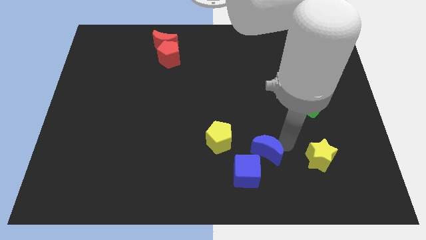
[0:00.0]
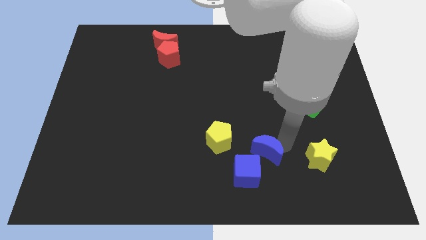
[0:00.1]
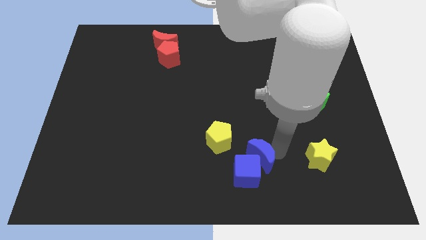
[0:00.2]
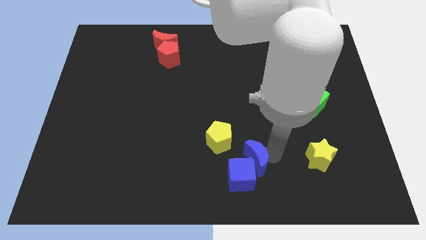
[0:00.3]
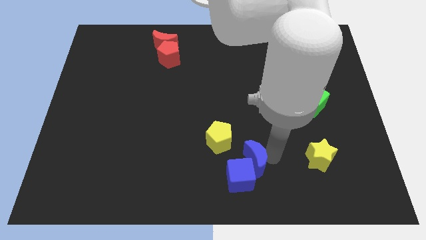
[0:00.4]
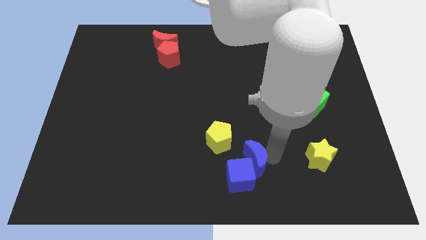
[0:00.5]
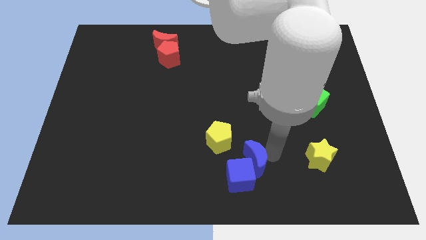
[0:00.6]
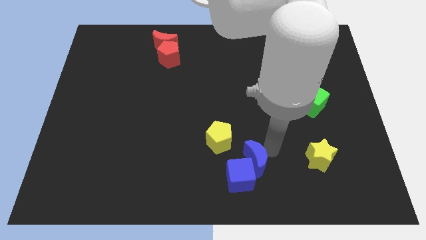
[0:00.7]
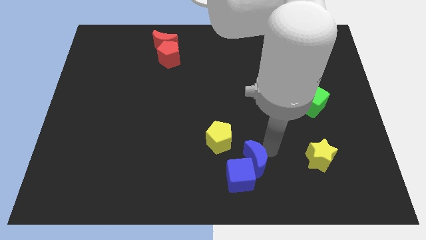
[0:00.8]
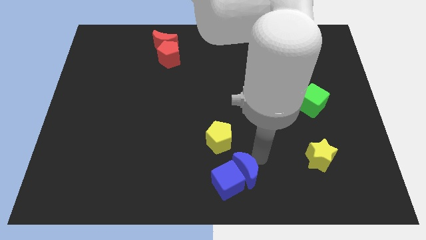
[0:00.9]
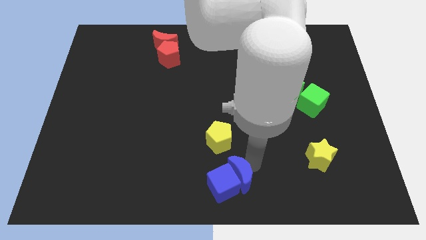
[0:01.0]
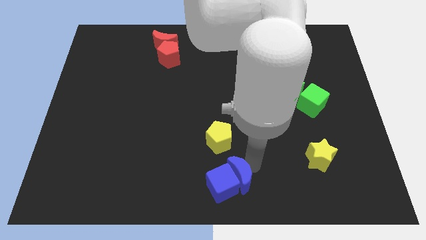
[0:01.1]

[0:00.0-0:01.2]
place the blue blocks below the yellow pentagon

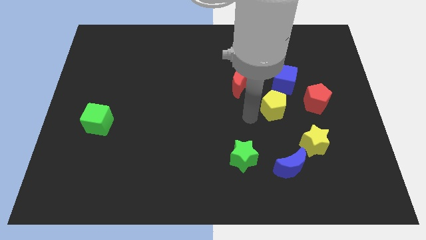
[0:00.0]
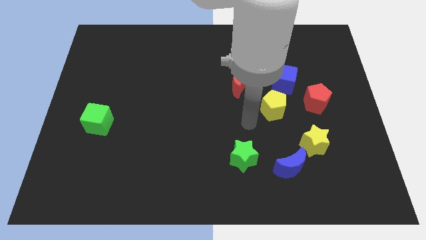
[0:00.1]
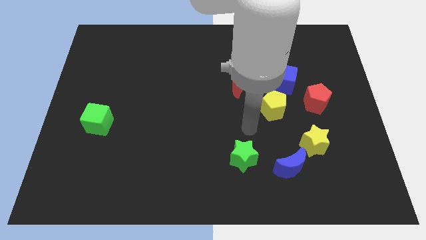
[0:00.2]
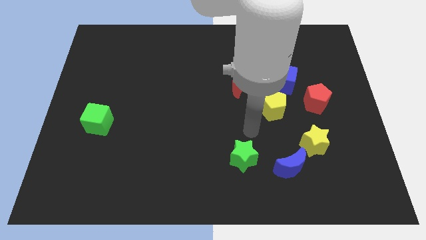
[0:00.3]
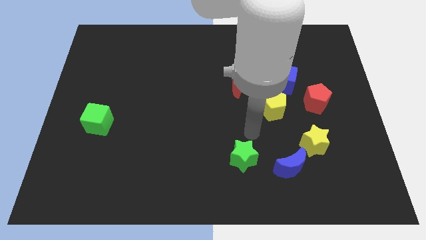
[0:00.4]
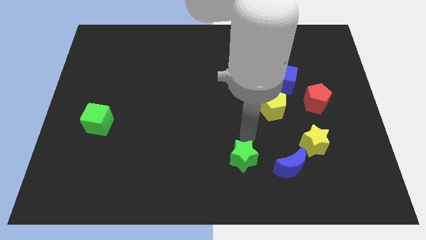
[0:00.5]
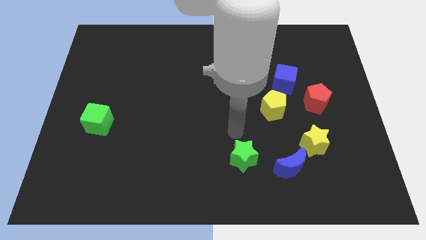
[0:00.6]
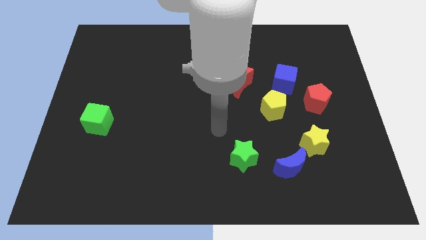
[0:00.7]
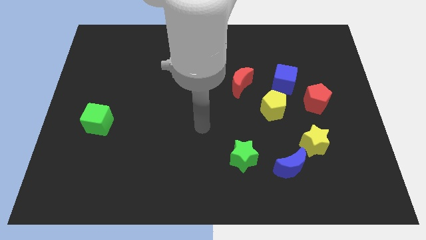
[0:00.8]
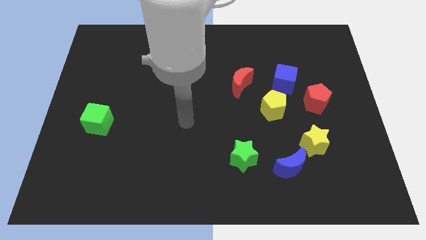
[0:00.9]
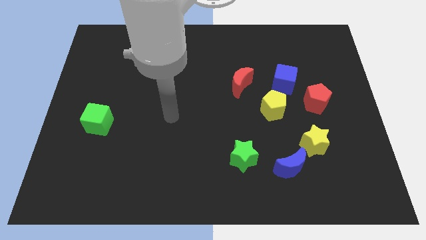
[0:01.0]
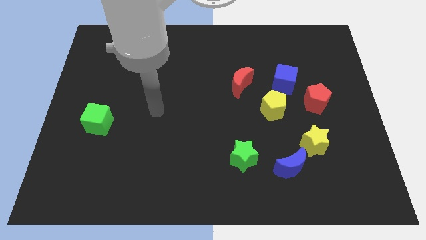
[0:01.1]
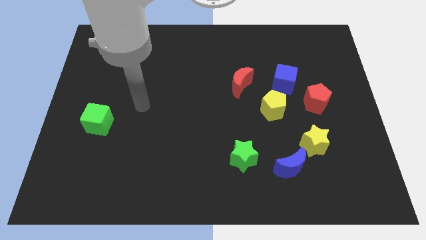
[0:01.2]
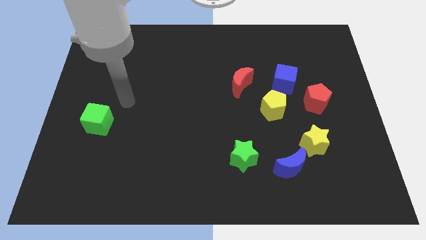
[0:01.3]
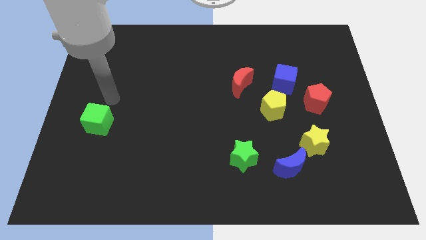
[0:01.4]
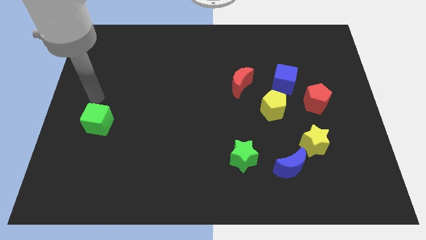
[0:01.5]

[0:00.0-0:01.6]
go away from the yellow pentagon

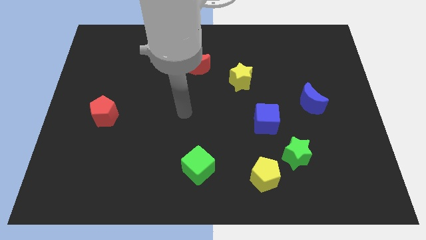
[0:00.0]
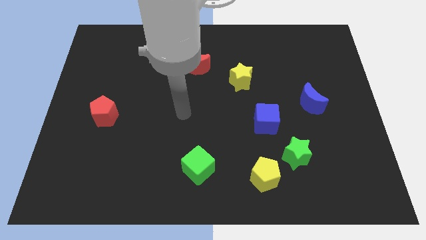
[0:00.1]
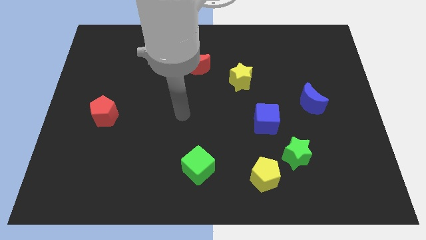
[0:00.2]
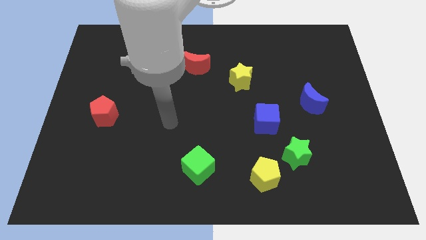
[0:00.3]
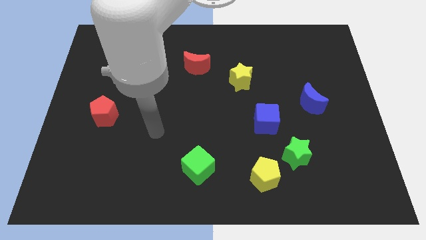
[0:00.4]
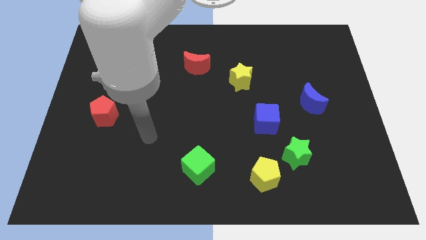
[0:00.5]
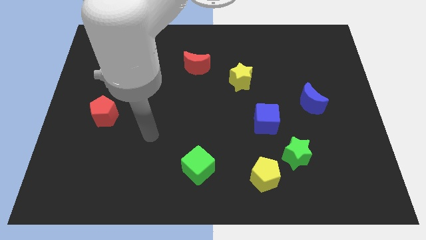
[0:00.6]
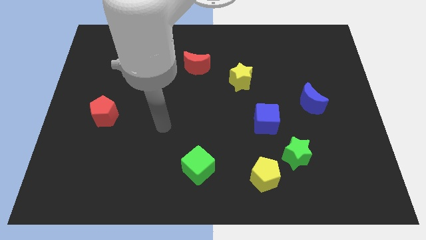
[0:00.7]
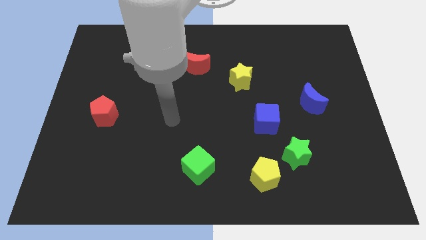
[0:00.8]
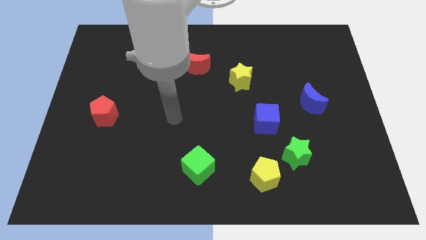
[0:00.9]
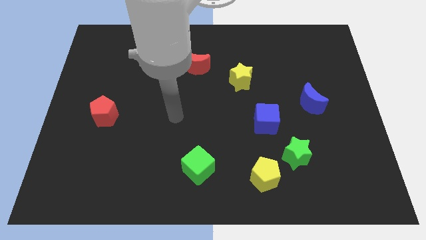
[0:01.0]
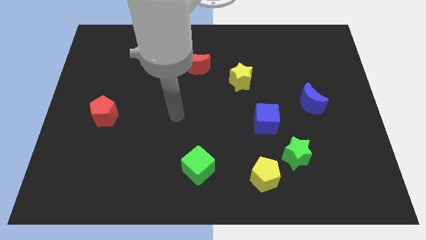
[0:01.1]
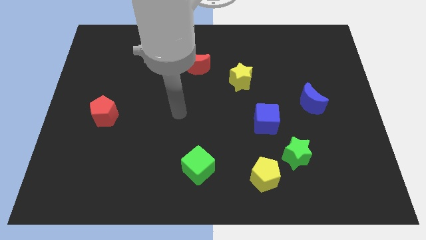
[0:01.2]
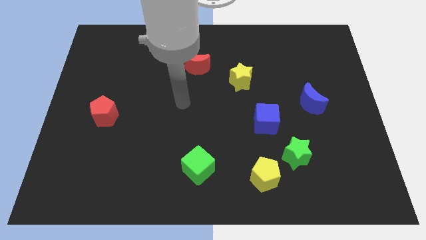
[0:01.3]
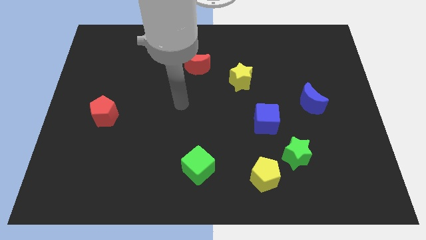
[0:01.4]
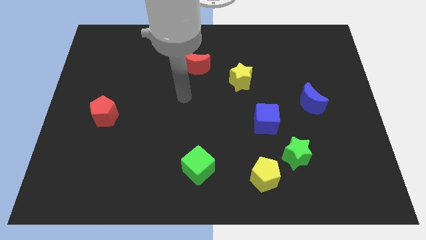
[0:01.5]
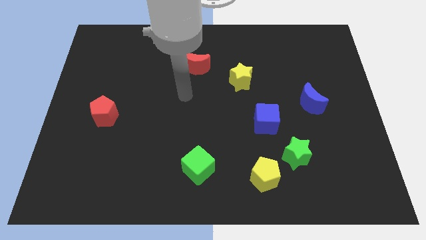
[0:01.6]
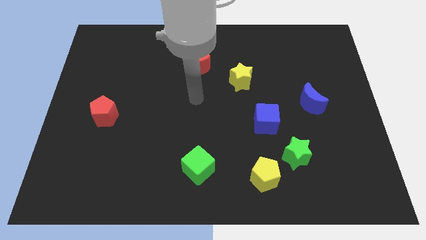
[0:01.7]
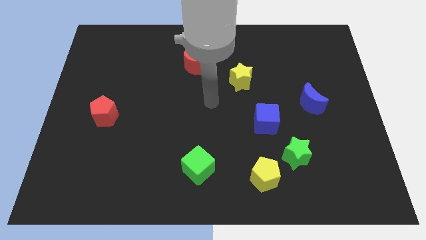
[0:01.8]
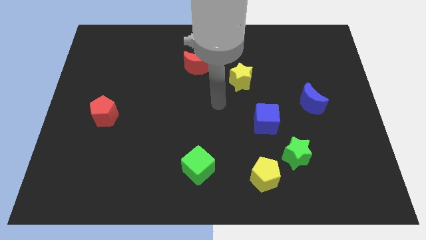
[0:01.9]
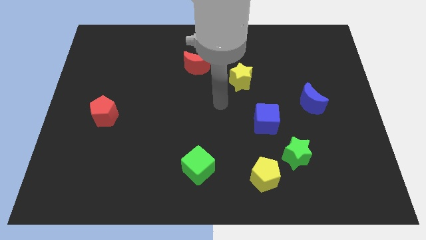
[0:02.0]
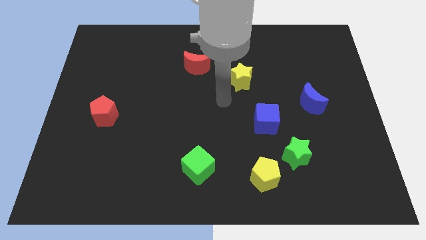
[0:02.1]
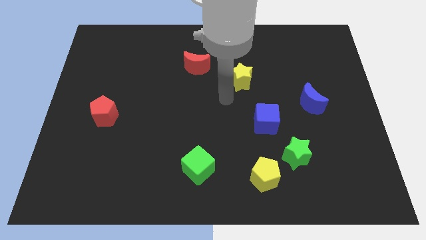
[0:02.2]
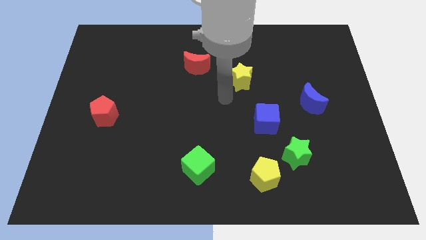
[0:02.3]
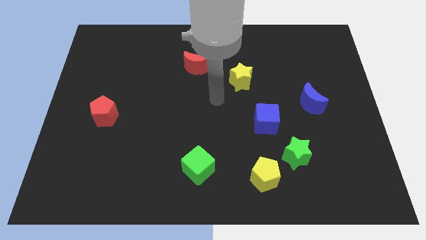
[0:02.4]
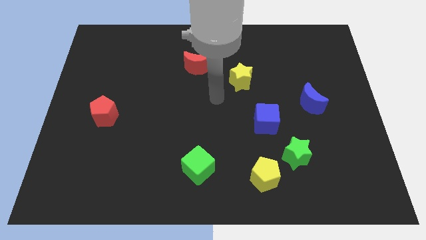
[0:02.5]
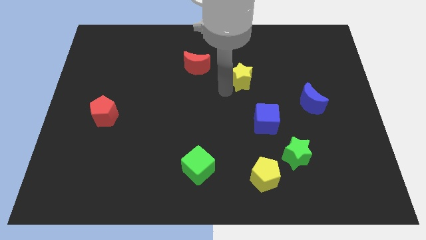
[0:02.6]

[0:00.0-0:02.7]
move your arm towards the yellow star

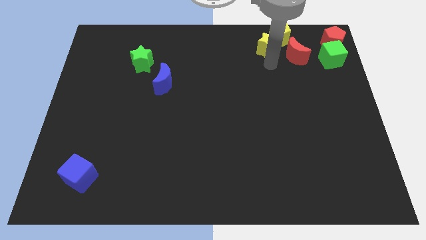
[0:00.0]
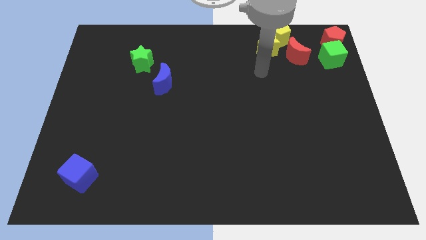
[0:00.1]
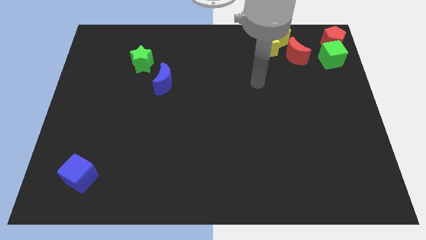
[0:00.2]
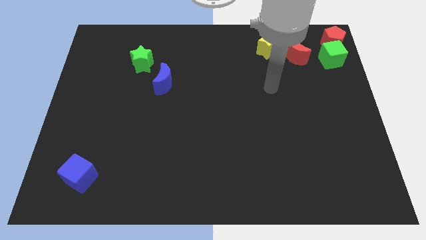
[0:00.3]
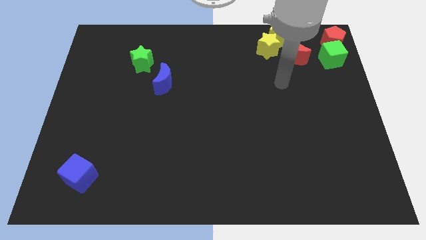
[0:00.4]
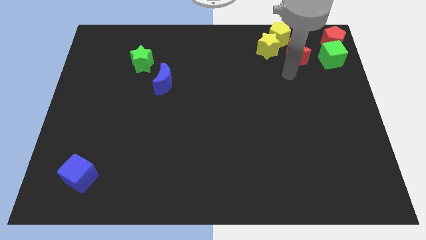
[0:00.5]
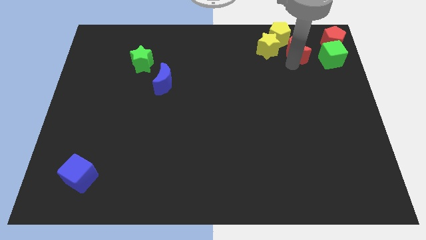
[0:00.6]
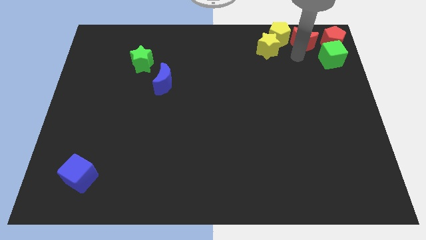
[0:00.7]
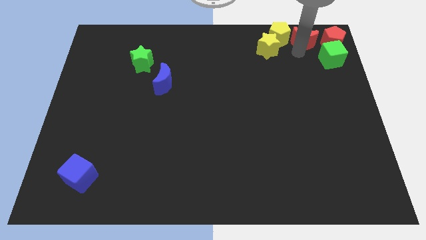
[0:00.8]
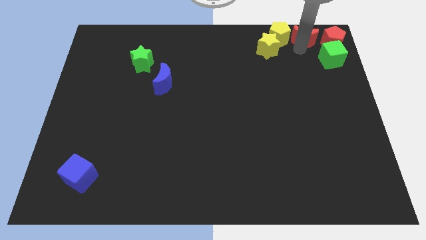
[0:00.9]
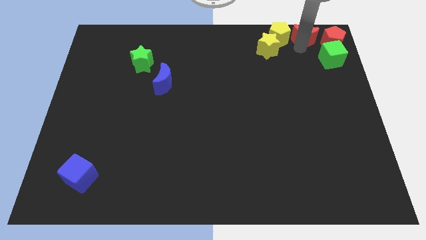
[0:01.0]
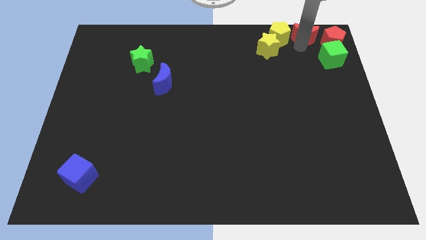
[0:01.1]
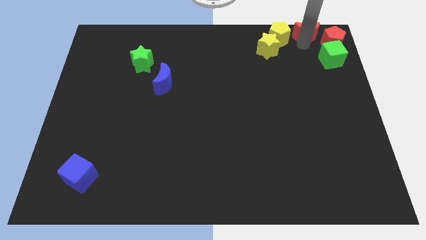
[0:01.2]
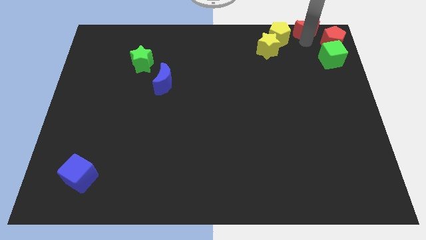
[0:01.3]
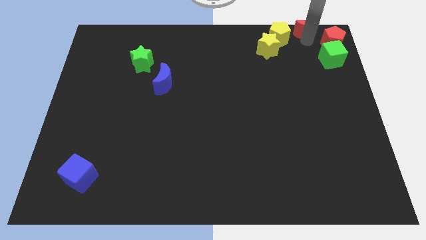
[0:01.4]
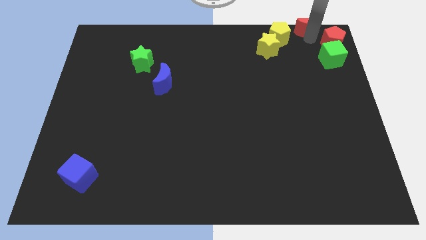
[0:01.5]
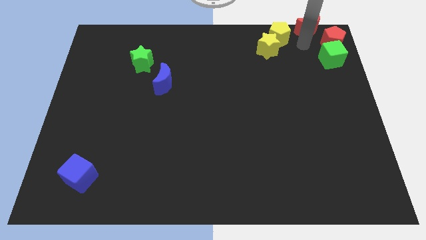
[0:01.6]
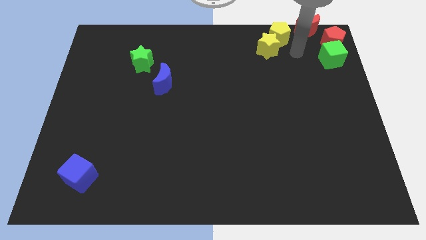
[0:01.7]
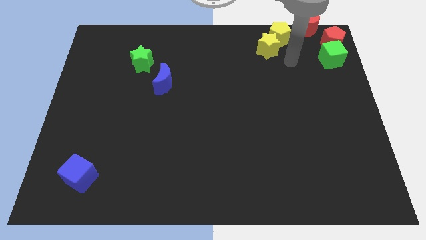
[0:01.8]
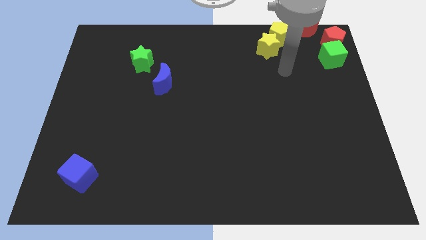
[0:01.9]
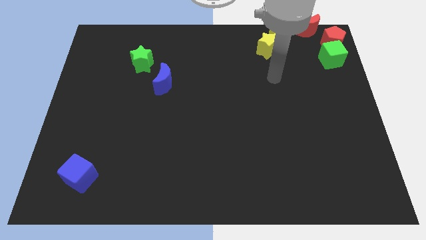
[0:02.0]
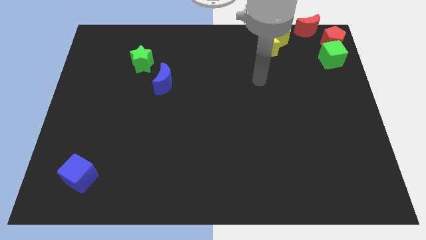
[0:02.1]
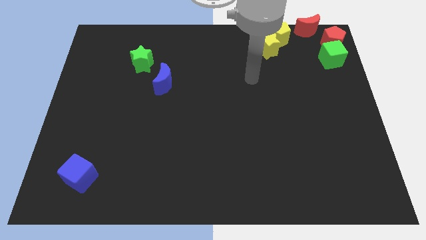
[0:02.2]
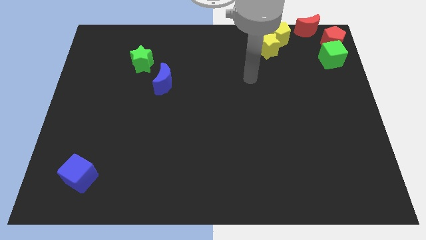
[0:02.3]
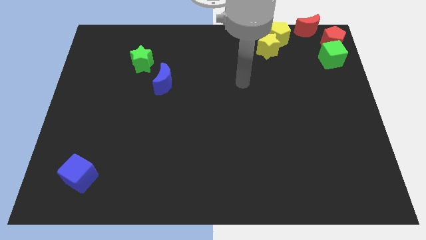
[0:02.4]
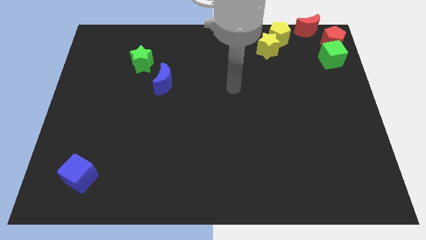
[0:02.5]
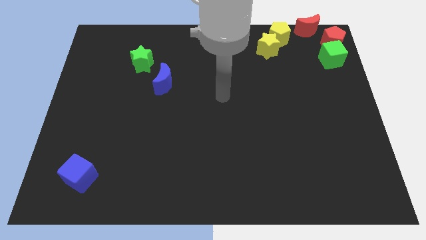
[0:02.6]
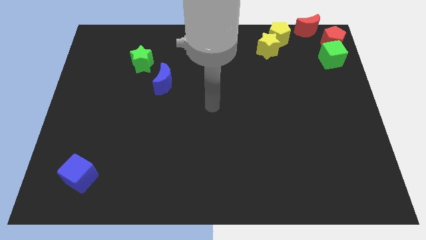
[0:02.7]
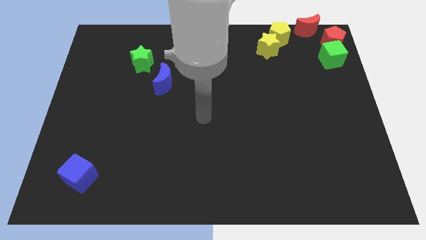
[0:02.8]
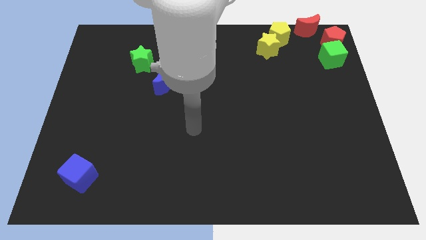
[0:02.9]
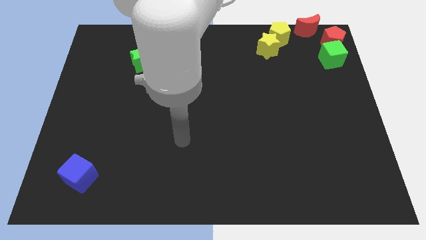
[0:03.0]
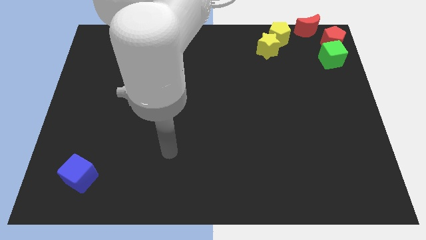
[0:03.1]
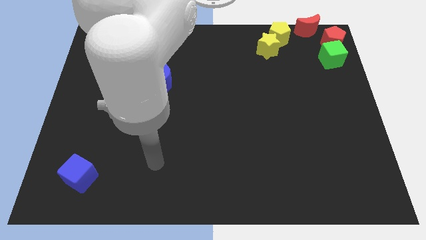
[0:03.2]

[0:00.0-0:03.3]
place the red moon in between the yellow pentagon and red pentagon

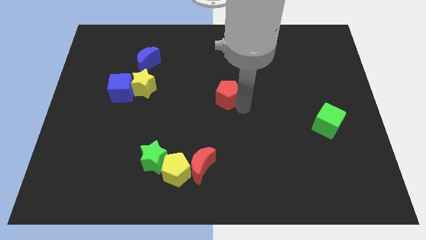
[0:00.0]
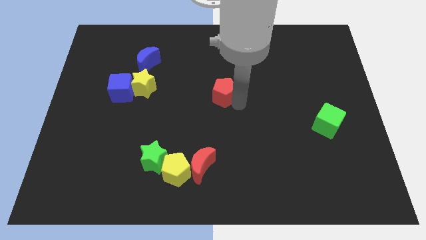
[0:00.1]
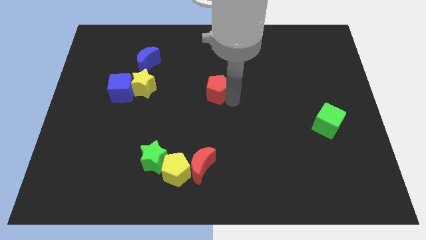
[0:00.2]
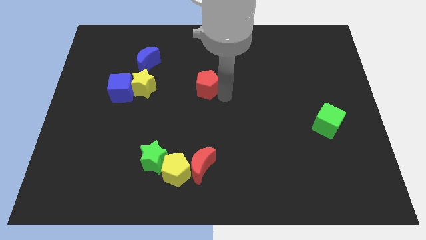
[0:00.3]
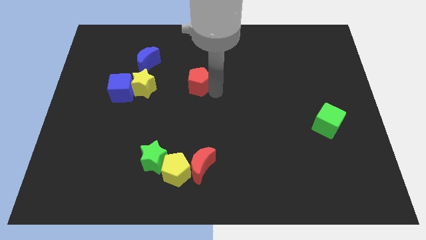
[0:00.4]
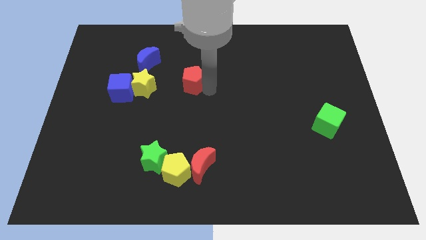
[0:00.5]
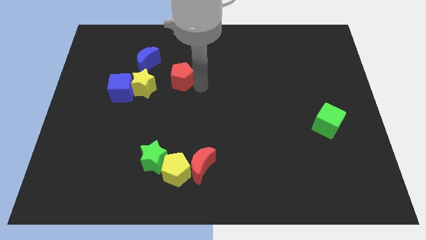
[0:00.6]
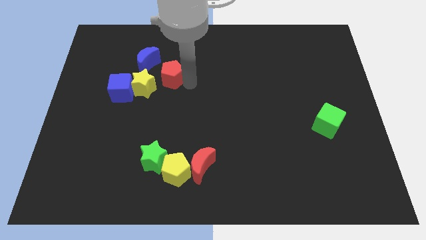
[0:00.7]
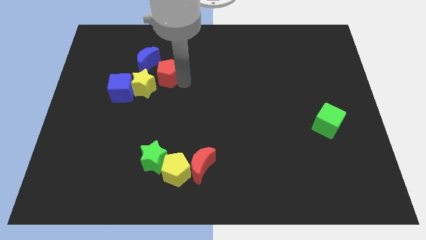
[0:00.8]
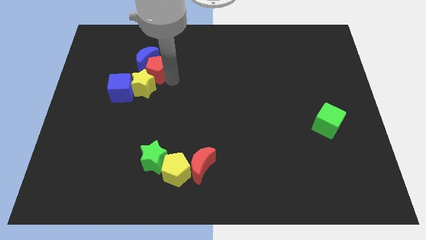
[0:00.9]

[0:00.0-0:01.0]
place the red pentagon ajdacent to the yellow star and blue moon
